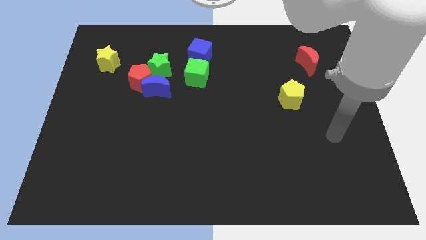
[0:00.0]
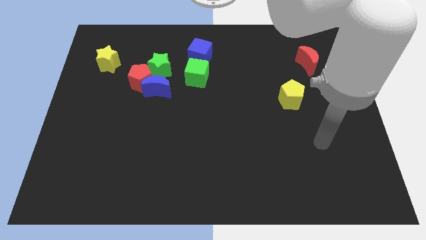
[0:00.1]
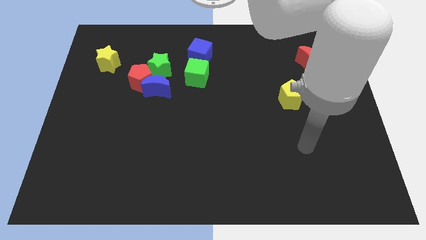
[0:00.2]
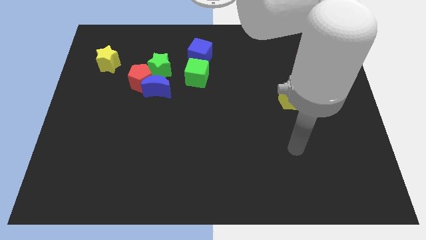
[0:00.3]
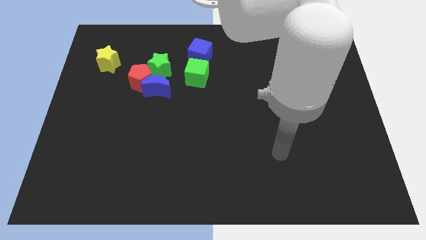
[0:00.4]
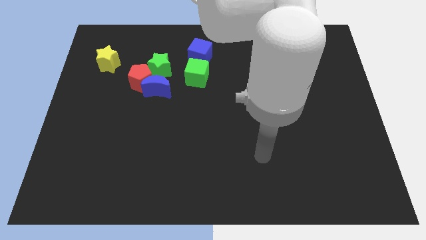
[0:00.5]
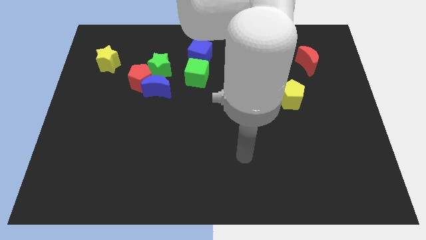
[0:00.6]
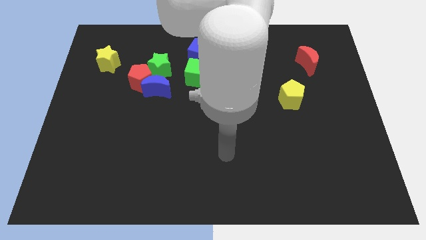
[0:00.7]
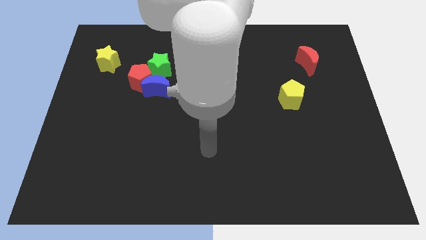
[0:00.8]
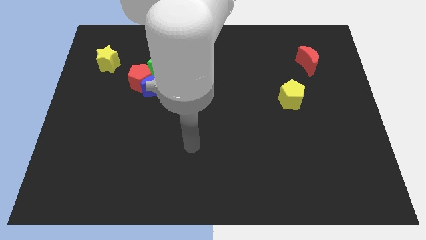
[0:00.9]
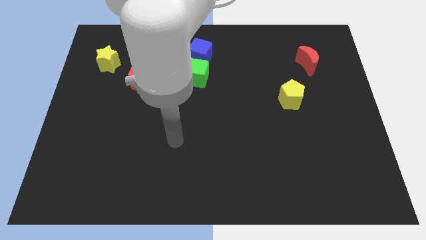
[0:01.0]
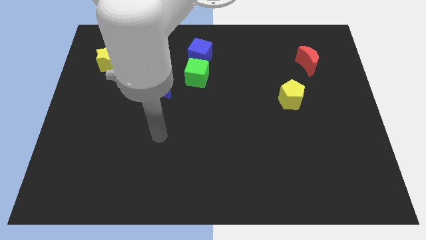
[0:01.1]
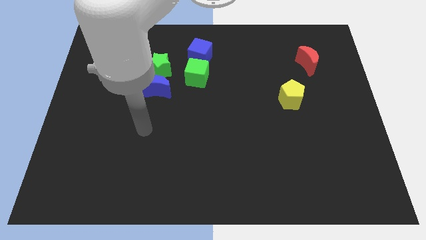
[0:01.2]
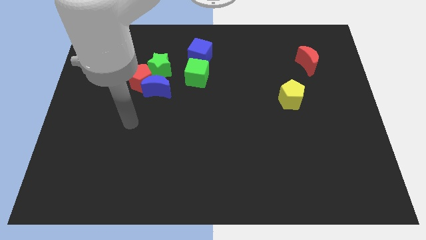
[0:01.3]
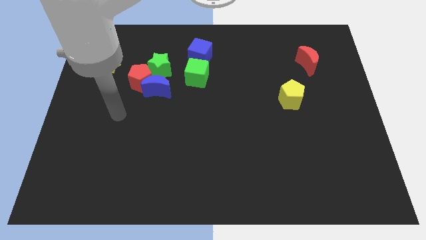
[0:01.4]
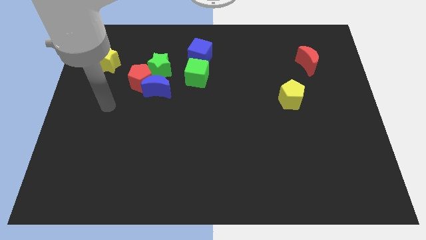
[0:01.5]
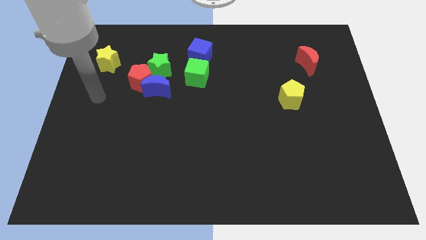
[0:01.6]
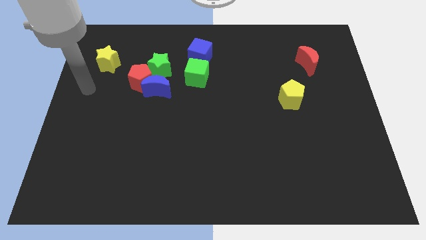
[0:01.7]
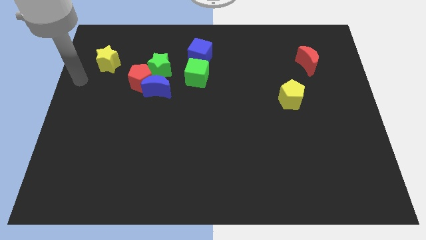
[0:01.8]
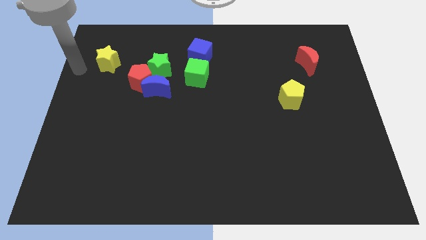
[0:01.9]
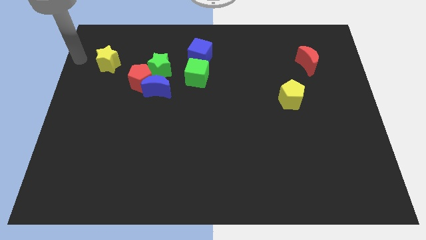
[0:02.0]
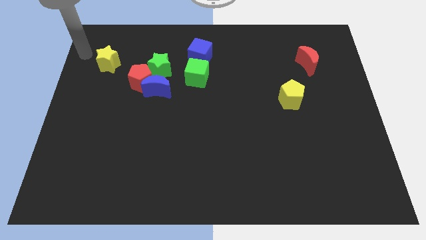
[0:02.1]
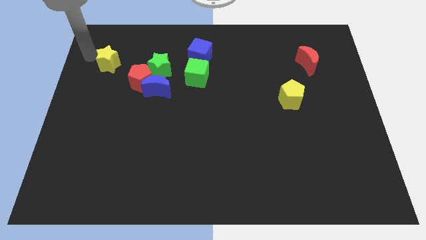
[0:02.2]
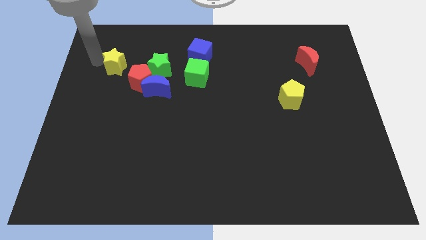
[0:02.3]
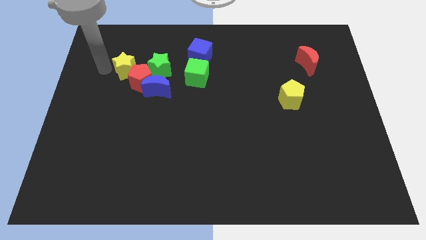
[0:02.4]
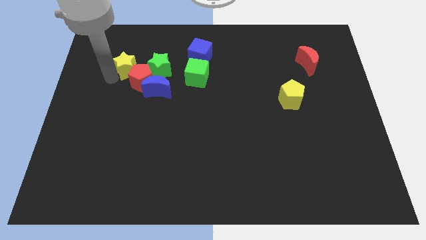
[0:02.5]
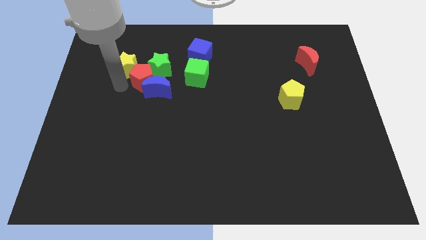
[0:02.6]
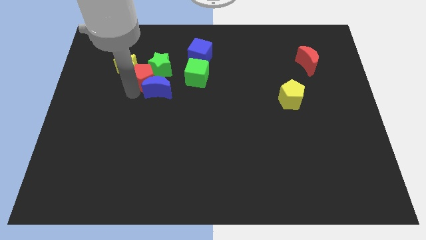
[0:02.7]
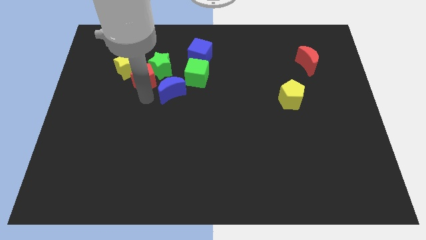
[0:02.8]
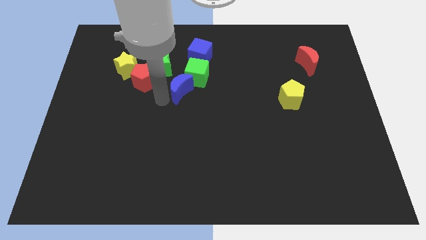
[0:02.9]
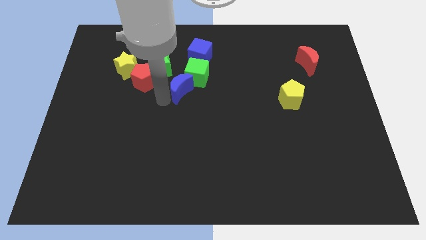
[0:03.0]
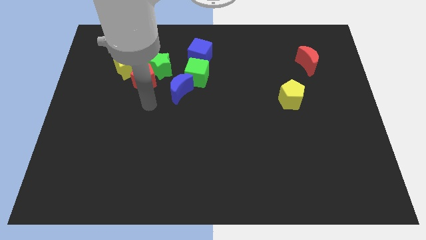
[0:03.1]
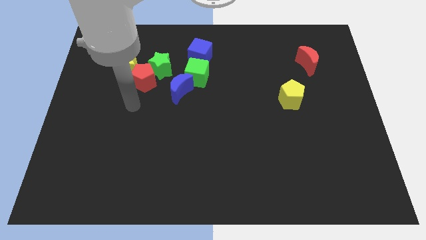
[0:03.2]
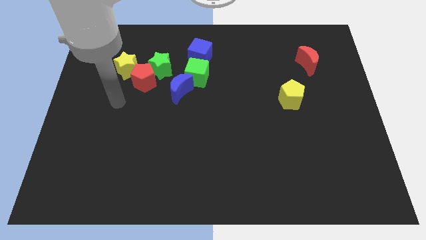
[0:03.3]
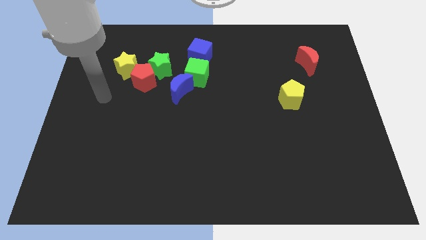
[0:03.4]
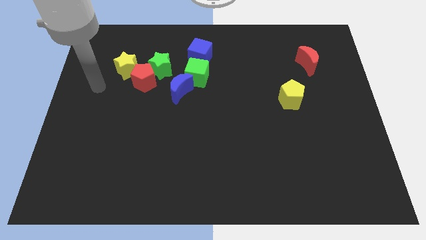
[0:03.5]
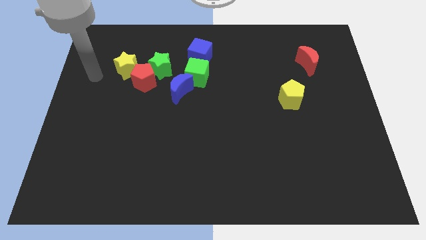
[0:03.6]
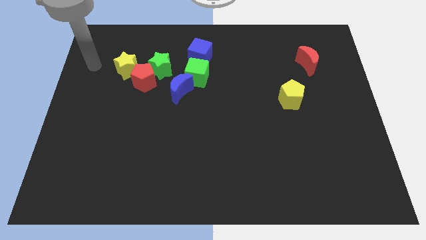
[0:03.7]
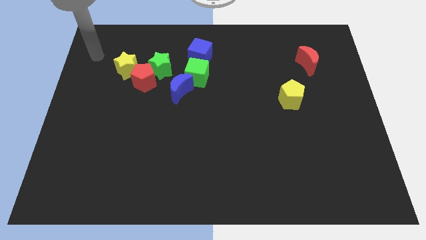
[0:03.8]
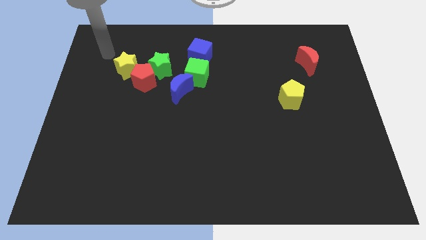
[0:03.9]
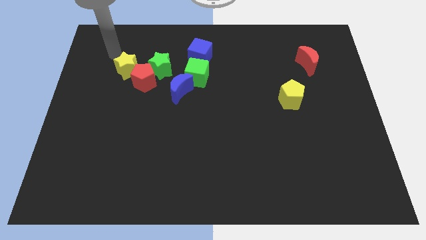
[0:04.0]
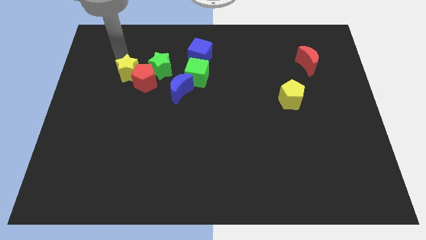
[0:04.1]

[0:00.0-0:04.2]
push the yellow star into the red pentagon

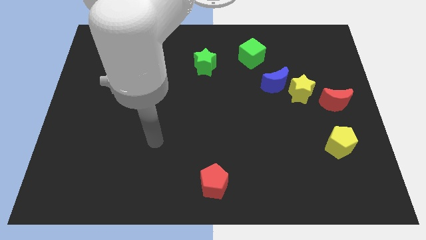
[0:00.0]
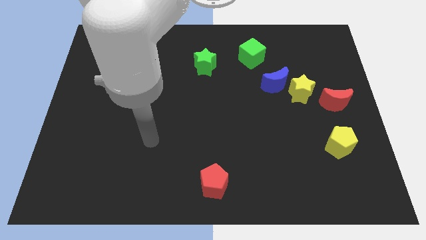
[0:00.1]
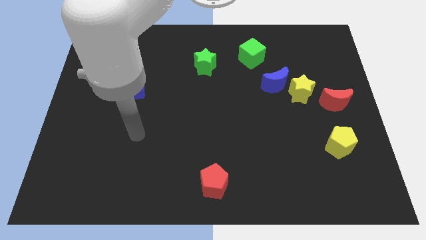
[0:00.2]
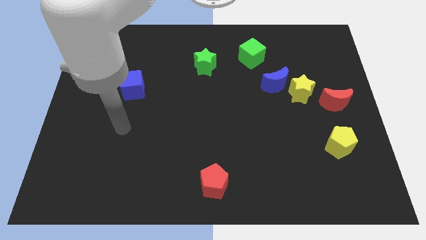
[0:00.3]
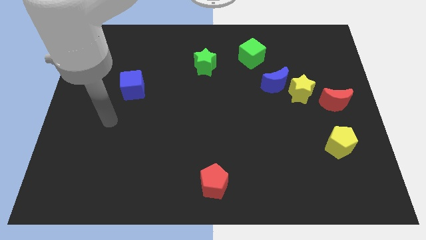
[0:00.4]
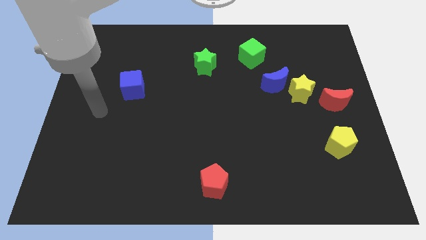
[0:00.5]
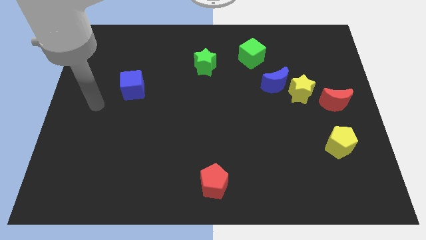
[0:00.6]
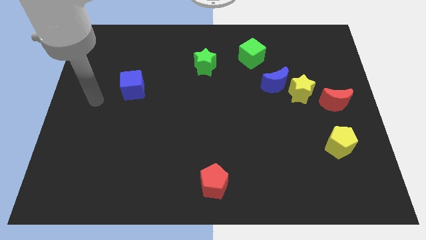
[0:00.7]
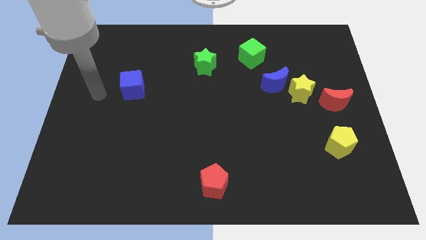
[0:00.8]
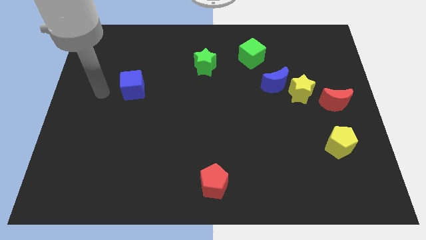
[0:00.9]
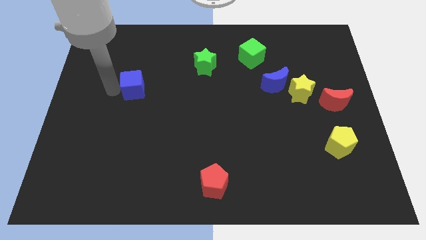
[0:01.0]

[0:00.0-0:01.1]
place the arm left to the blue cube

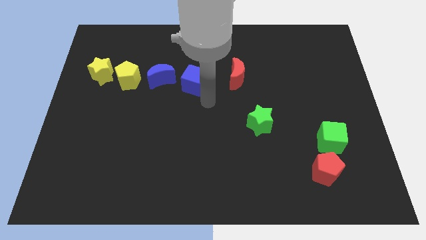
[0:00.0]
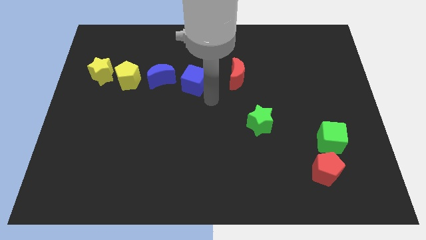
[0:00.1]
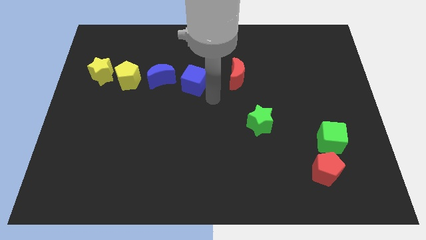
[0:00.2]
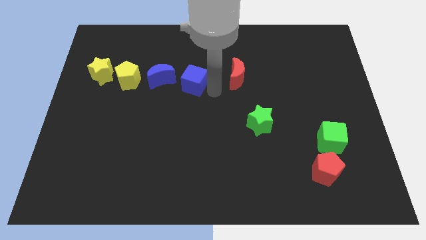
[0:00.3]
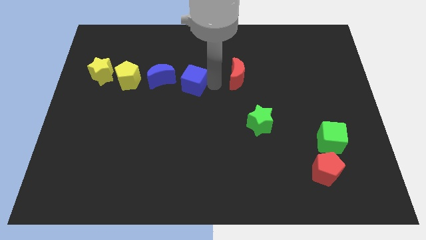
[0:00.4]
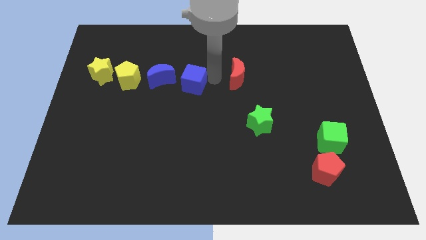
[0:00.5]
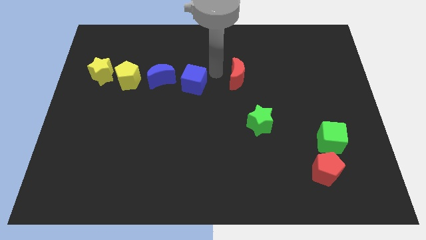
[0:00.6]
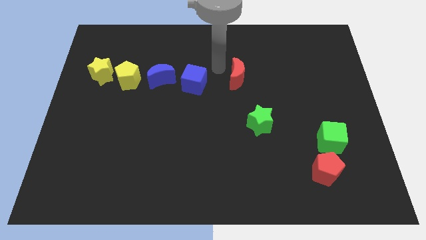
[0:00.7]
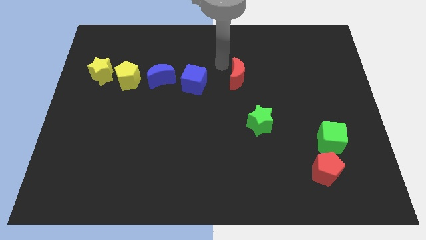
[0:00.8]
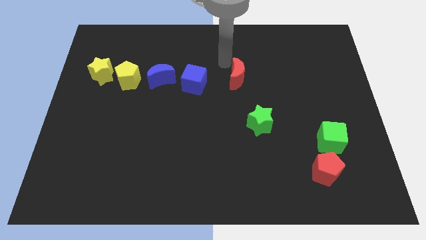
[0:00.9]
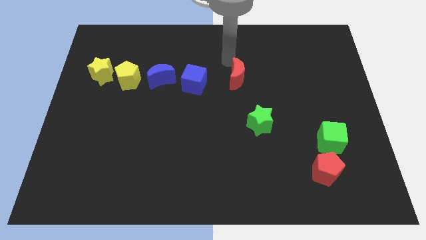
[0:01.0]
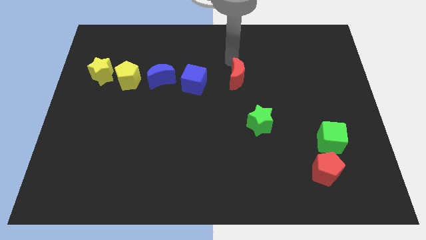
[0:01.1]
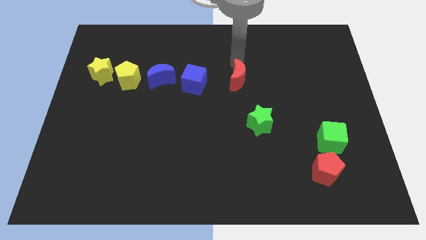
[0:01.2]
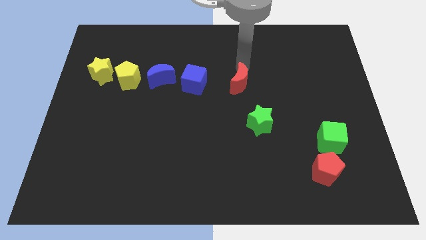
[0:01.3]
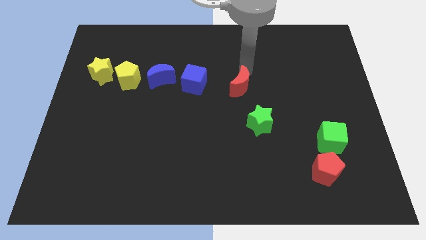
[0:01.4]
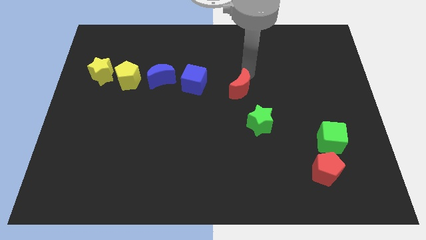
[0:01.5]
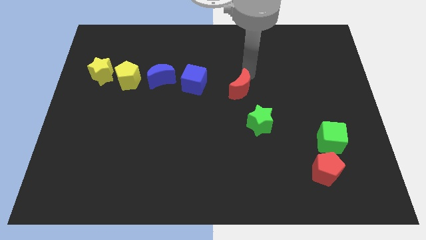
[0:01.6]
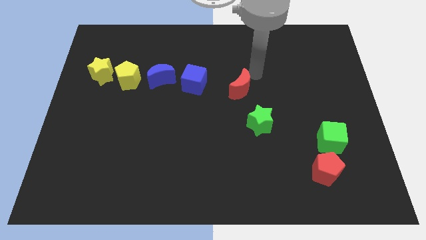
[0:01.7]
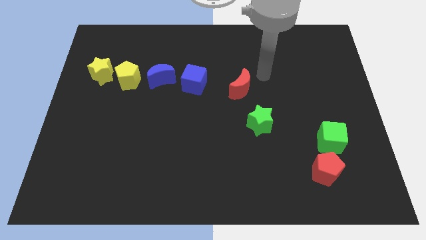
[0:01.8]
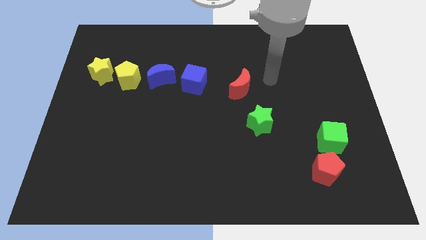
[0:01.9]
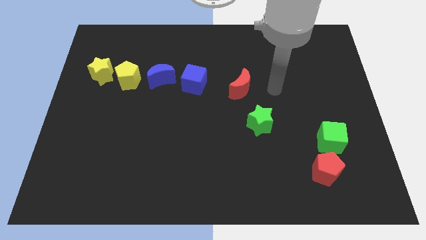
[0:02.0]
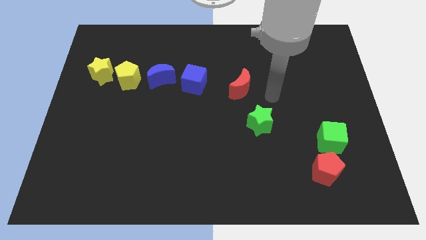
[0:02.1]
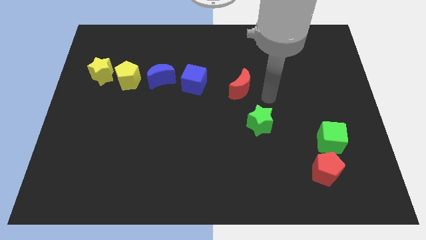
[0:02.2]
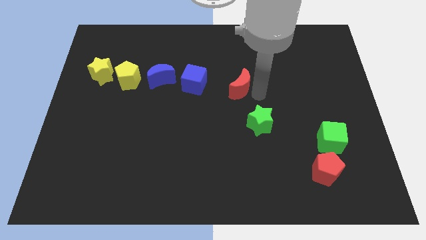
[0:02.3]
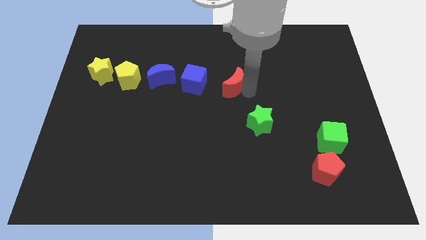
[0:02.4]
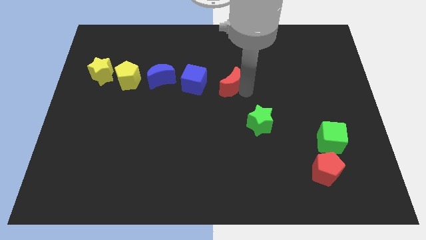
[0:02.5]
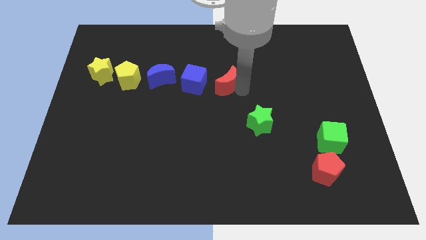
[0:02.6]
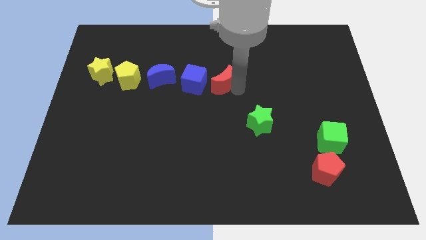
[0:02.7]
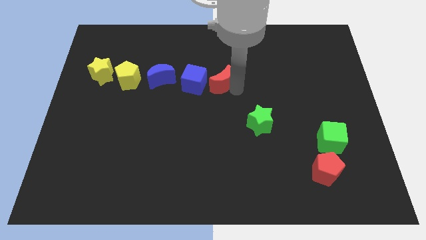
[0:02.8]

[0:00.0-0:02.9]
place red crescent beside blue cube

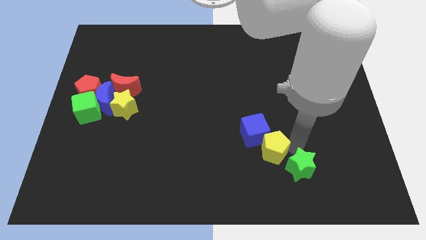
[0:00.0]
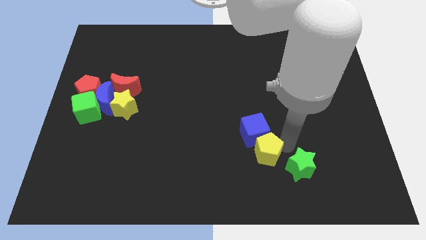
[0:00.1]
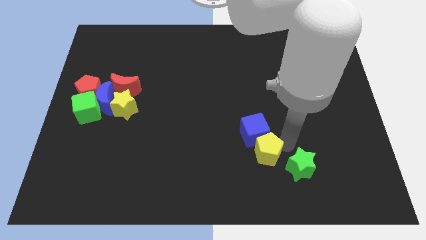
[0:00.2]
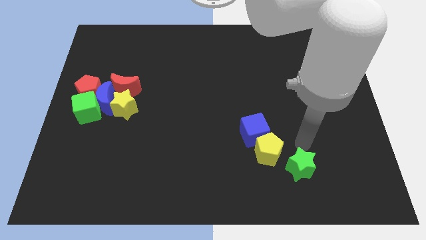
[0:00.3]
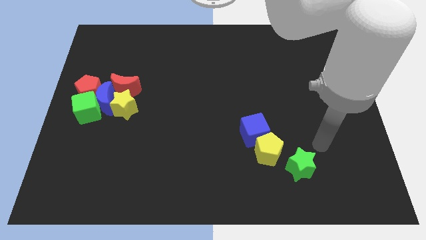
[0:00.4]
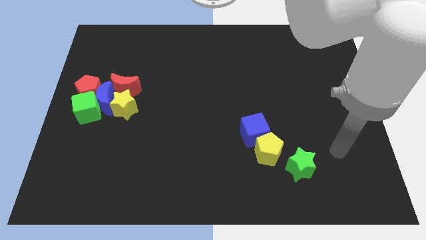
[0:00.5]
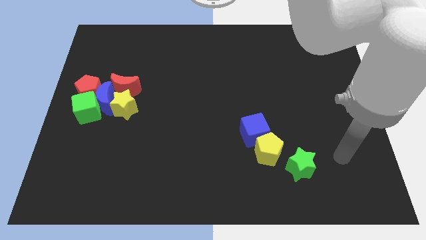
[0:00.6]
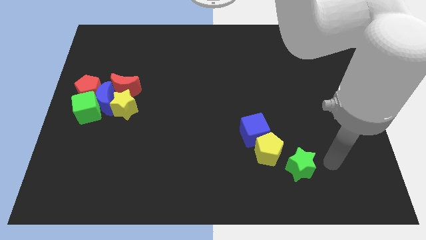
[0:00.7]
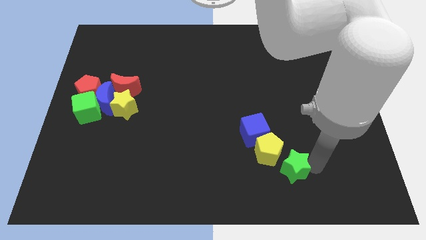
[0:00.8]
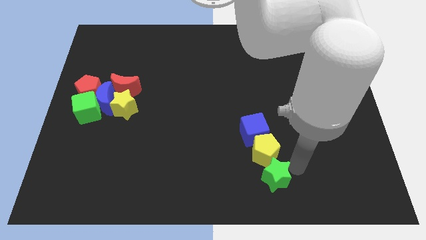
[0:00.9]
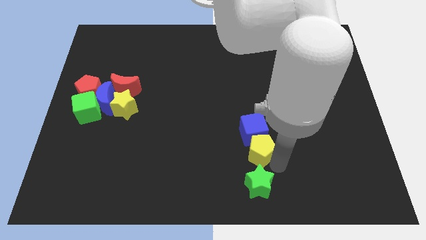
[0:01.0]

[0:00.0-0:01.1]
place the green star at the bottom of yellow pentagon
